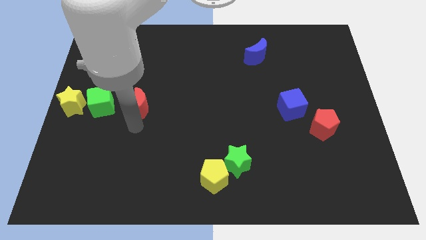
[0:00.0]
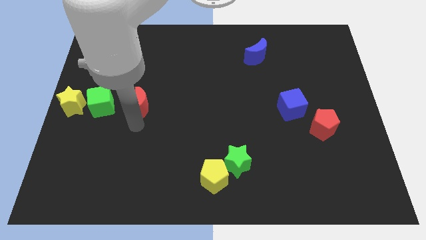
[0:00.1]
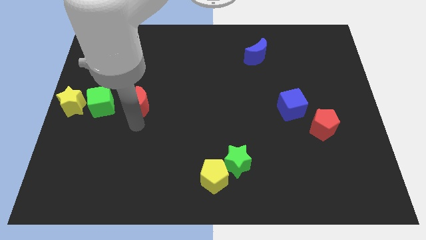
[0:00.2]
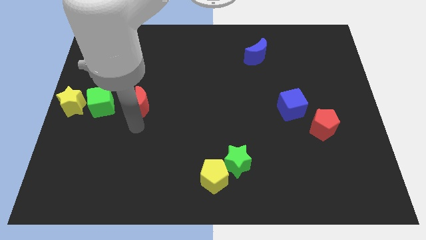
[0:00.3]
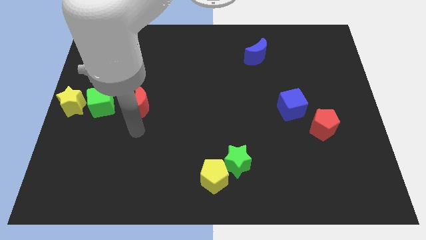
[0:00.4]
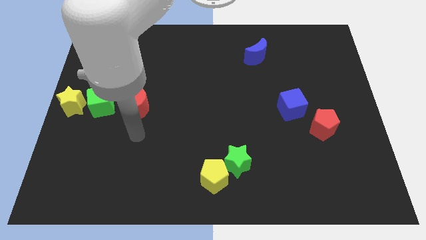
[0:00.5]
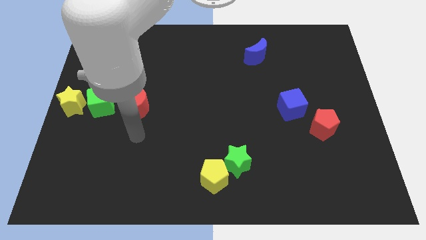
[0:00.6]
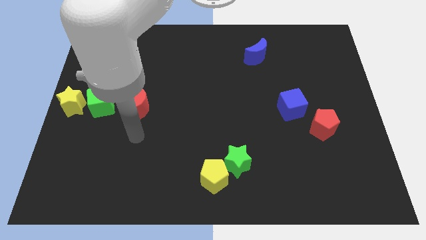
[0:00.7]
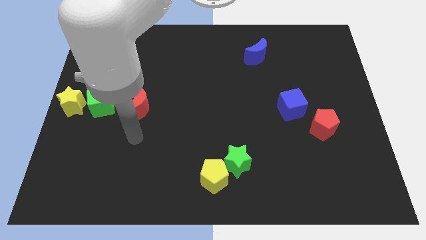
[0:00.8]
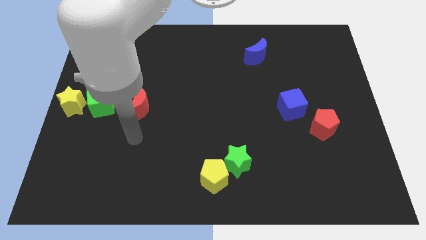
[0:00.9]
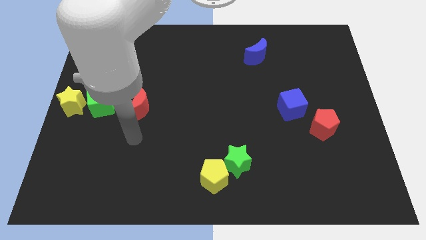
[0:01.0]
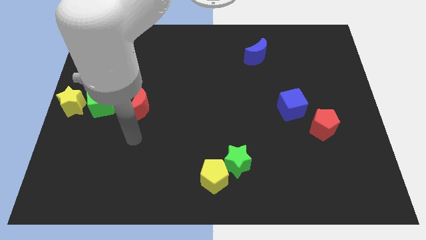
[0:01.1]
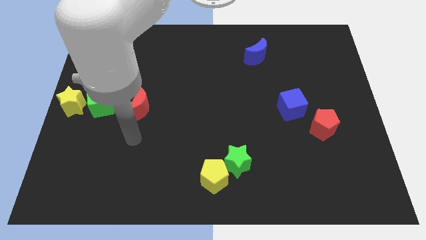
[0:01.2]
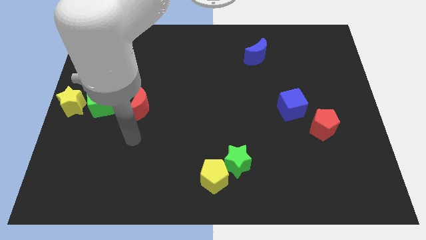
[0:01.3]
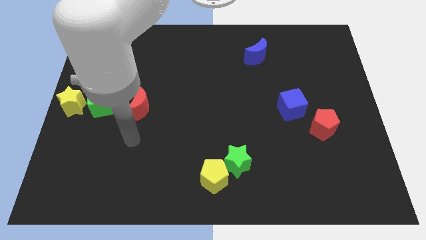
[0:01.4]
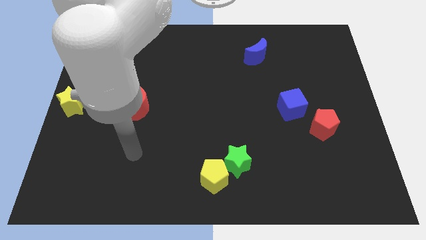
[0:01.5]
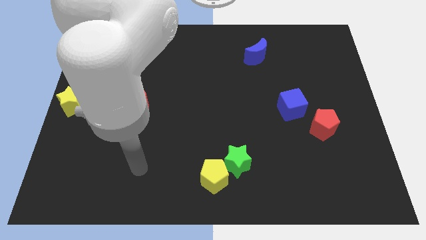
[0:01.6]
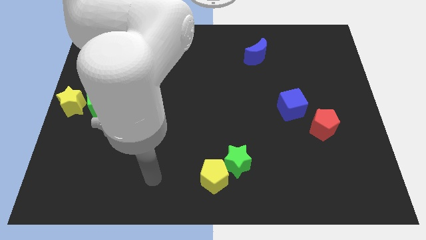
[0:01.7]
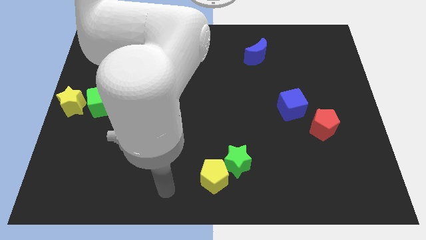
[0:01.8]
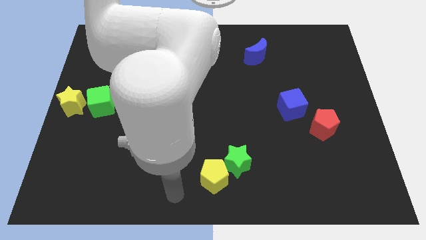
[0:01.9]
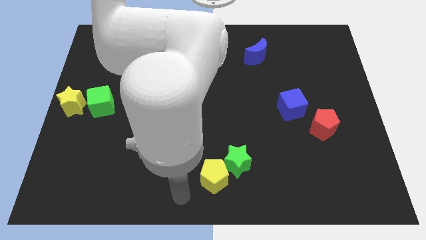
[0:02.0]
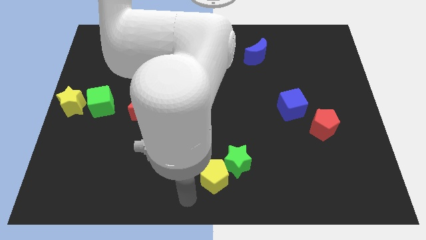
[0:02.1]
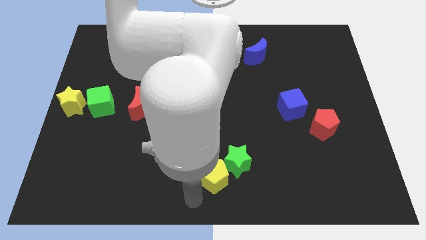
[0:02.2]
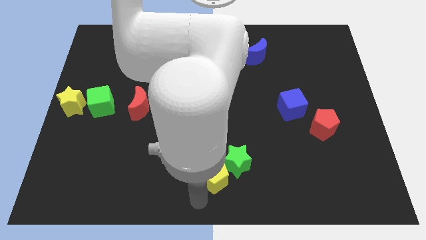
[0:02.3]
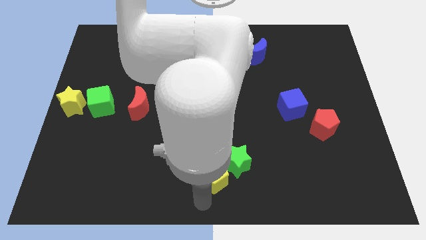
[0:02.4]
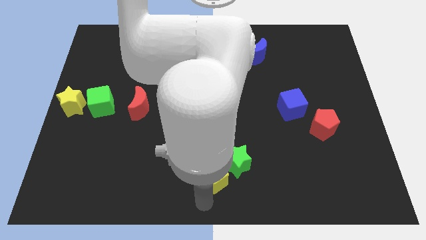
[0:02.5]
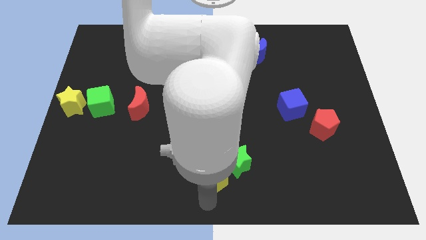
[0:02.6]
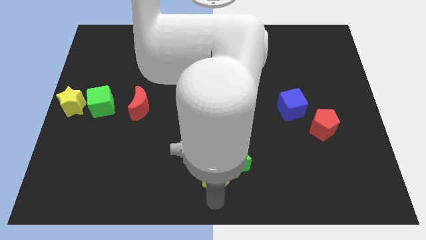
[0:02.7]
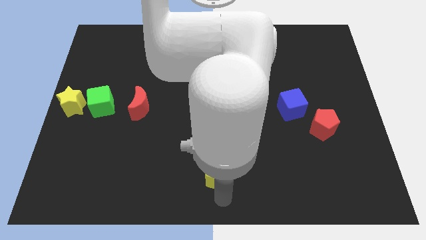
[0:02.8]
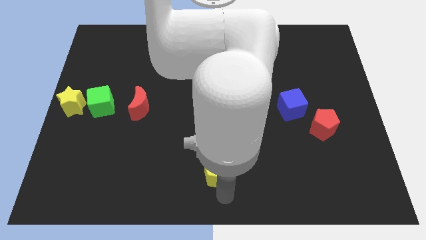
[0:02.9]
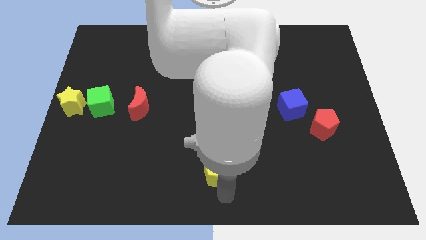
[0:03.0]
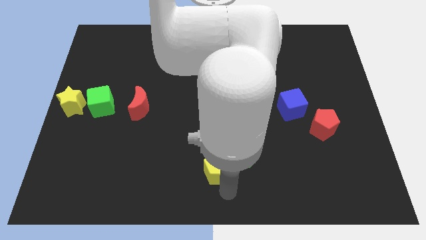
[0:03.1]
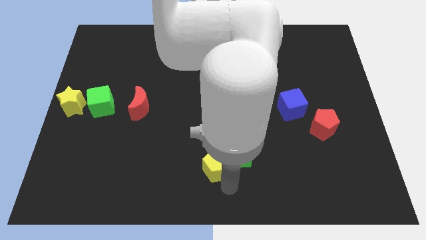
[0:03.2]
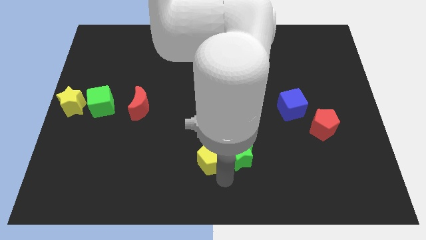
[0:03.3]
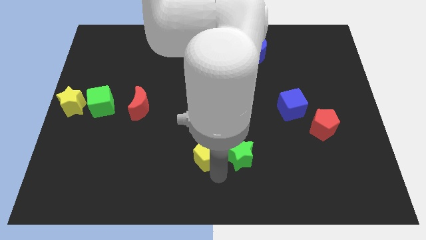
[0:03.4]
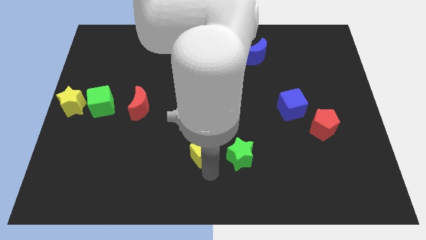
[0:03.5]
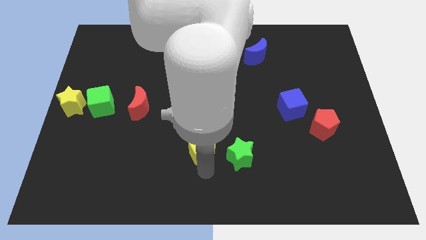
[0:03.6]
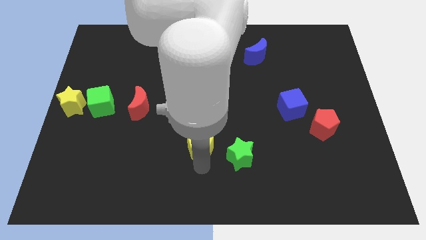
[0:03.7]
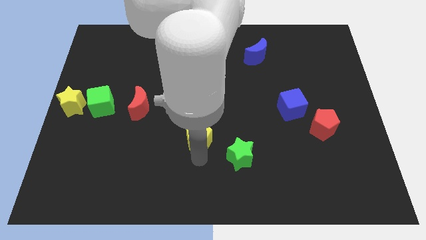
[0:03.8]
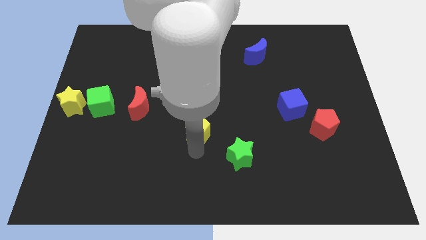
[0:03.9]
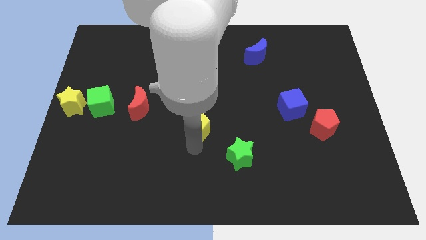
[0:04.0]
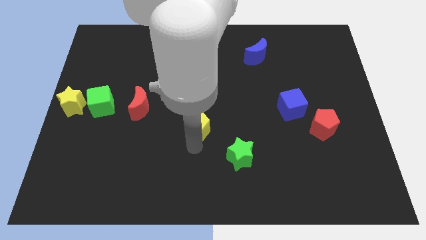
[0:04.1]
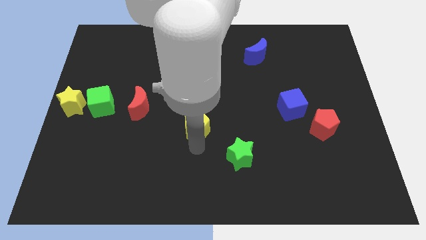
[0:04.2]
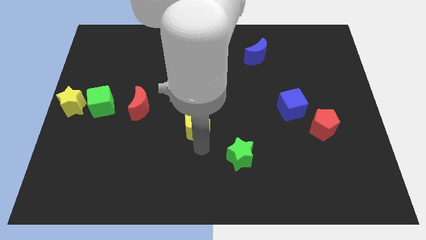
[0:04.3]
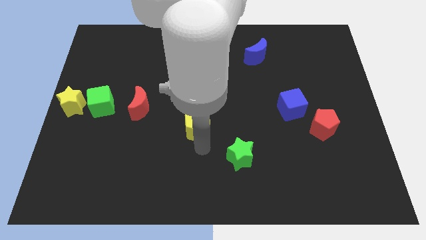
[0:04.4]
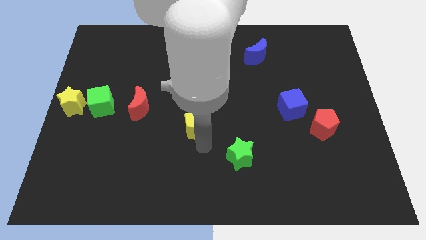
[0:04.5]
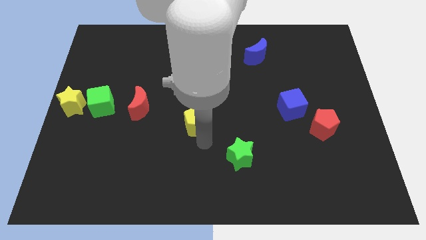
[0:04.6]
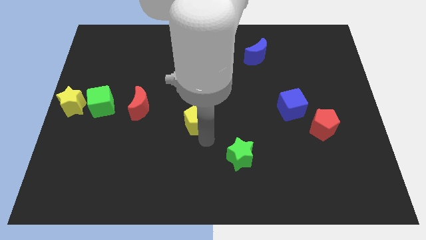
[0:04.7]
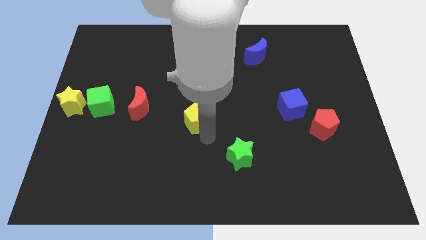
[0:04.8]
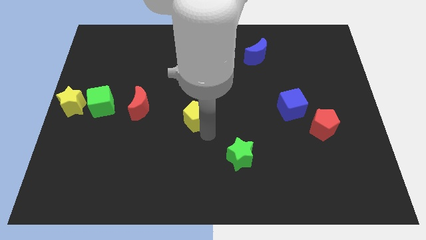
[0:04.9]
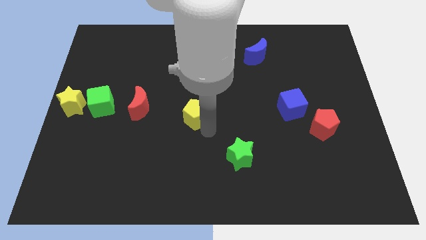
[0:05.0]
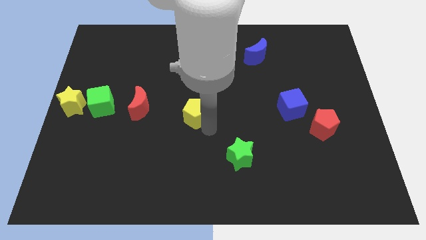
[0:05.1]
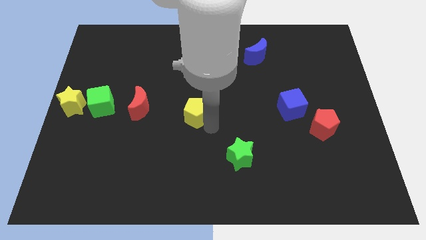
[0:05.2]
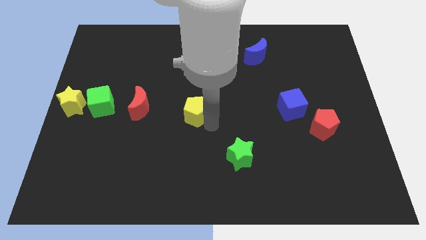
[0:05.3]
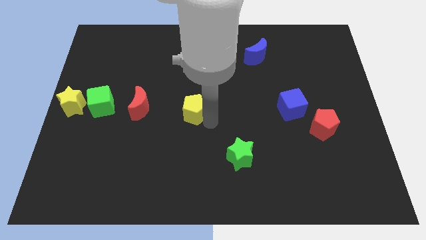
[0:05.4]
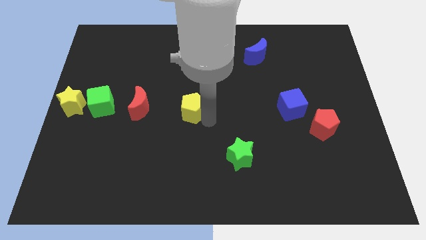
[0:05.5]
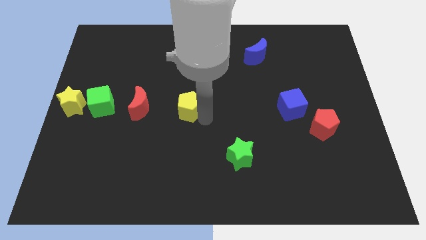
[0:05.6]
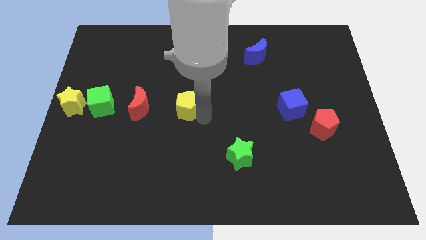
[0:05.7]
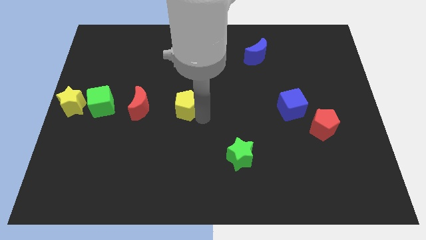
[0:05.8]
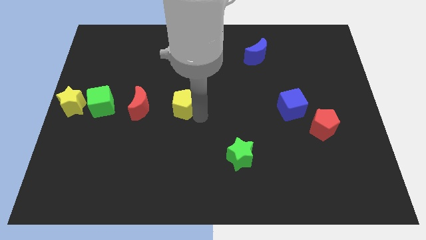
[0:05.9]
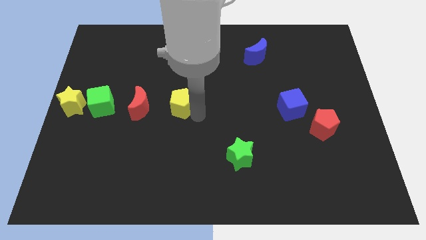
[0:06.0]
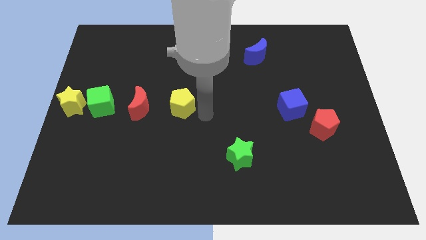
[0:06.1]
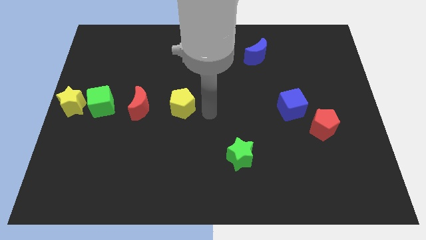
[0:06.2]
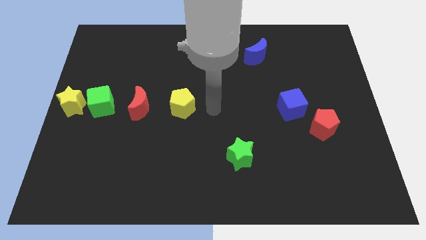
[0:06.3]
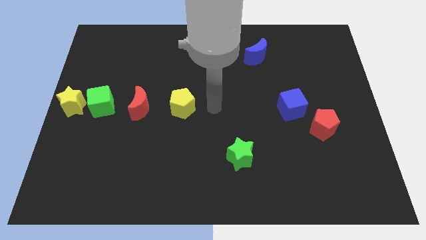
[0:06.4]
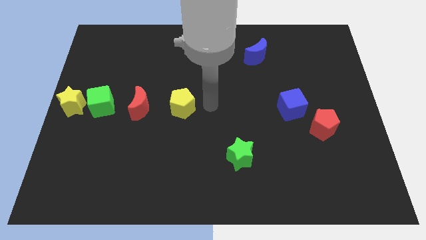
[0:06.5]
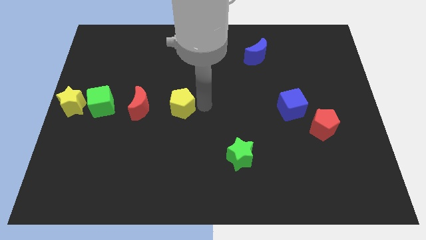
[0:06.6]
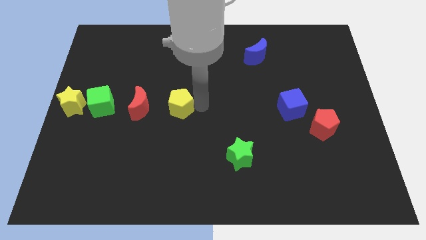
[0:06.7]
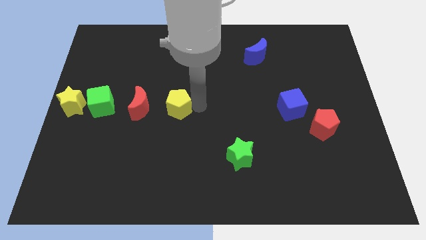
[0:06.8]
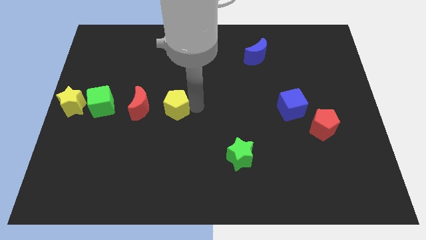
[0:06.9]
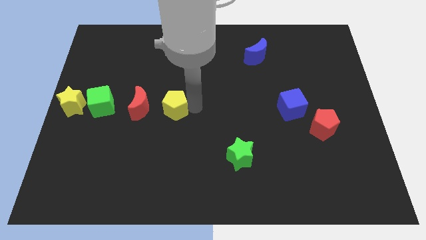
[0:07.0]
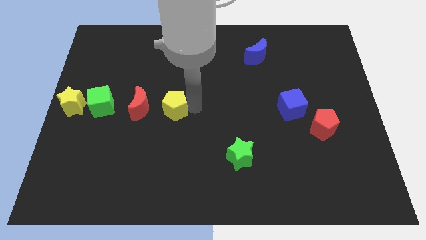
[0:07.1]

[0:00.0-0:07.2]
push the yellow pentagon to the right side of the red crescent

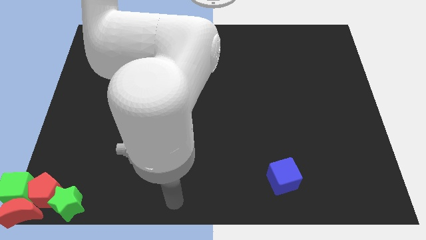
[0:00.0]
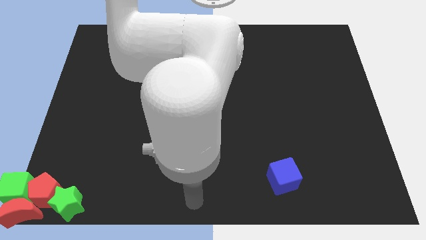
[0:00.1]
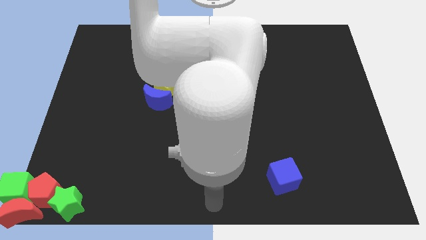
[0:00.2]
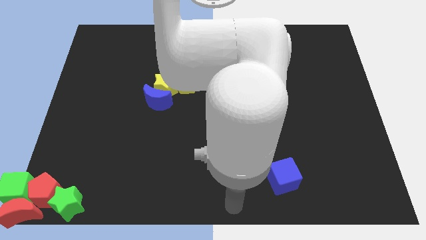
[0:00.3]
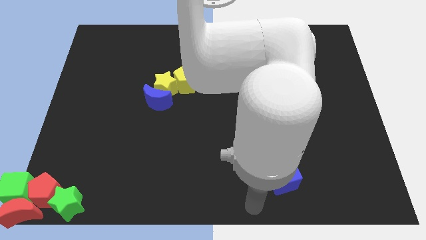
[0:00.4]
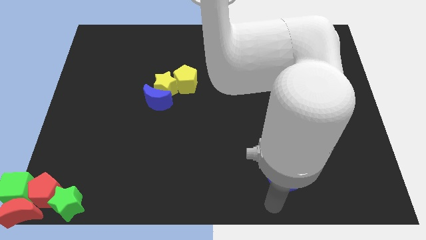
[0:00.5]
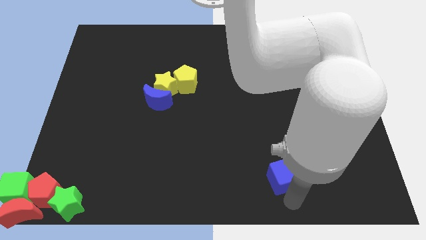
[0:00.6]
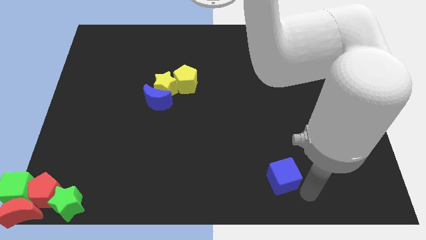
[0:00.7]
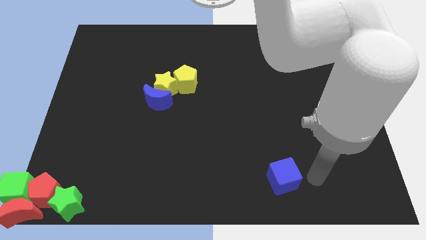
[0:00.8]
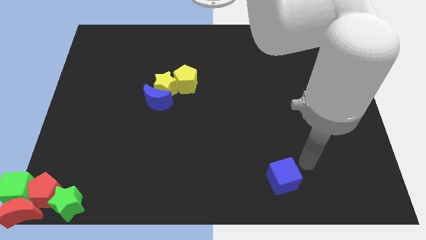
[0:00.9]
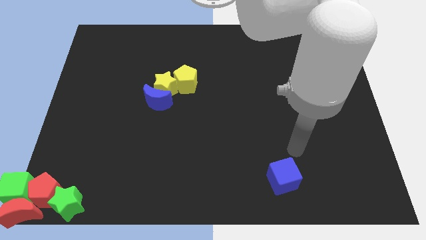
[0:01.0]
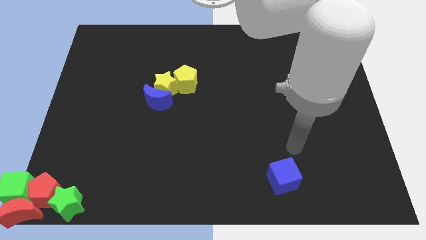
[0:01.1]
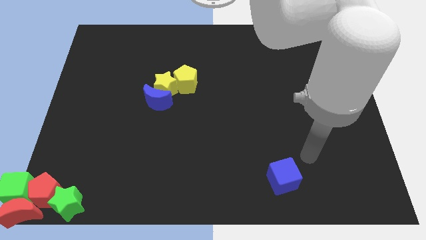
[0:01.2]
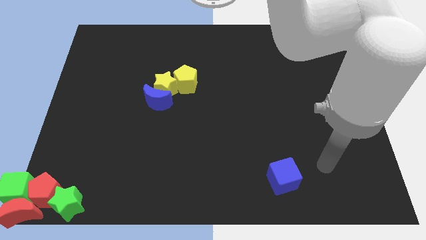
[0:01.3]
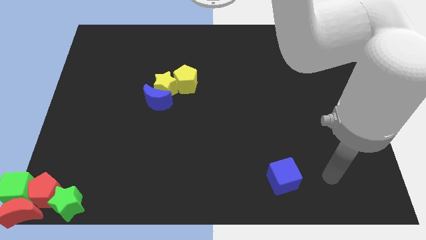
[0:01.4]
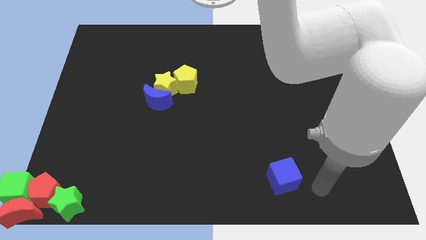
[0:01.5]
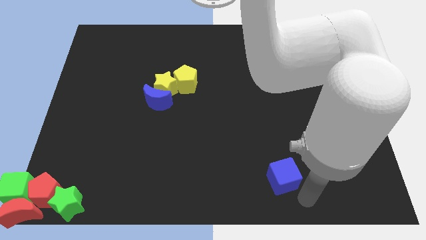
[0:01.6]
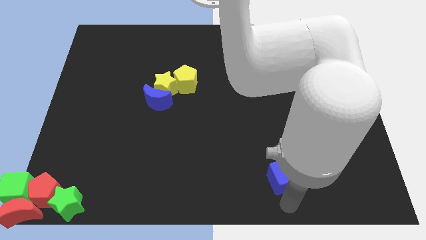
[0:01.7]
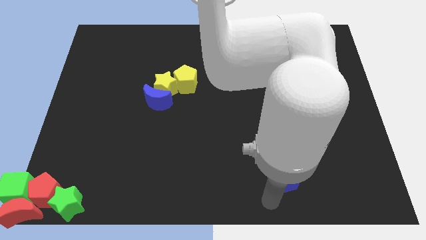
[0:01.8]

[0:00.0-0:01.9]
point your arm at the bottom side of the blue cube
